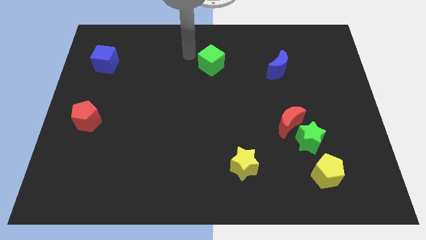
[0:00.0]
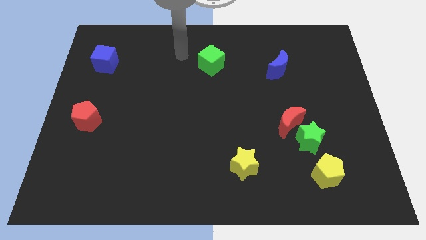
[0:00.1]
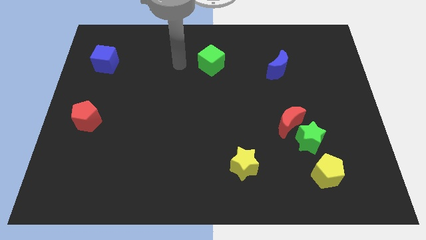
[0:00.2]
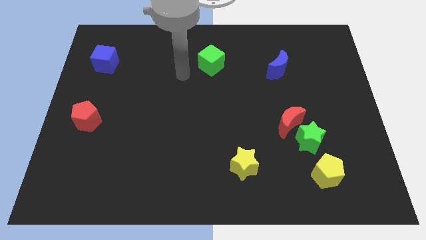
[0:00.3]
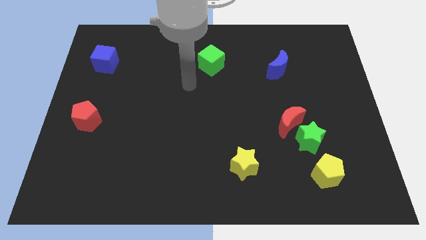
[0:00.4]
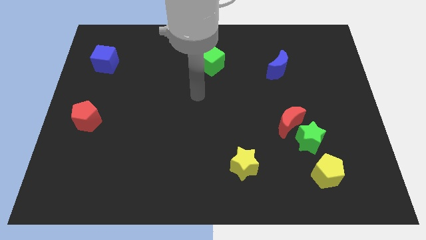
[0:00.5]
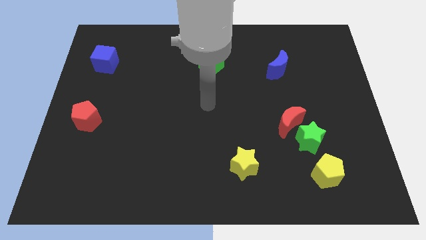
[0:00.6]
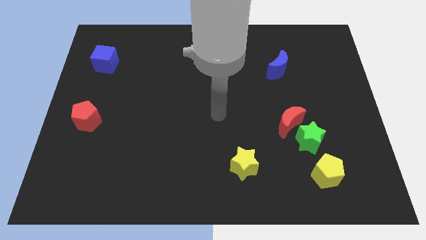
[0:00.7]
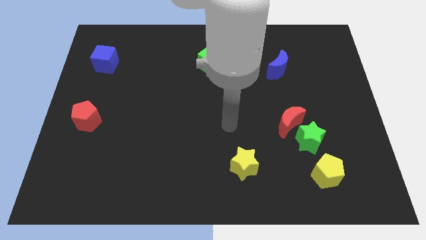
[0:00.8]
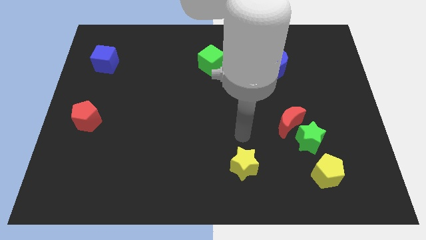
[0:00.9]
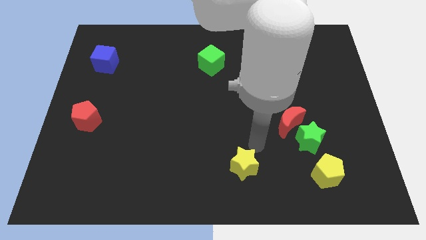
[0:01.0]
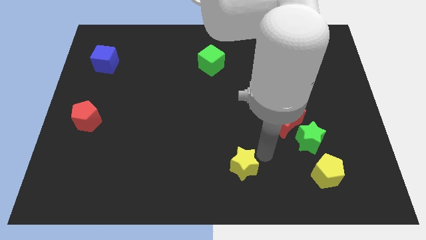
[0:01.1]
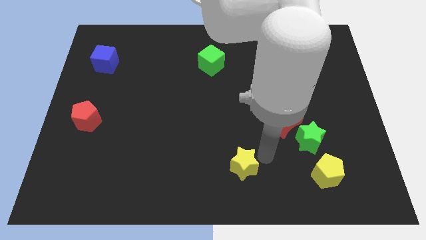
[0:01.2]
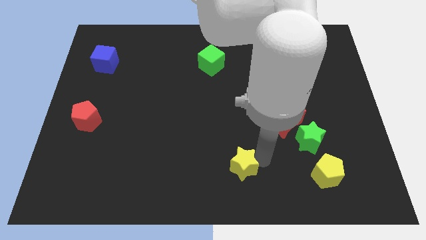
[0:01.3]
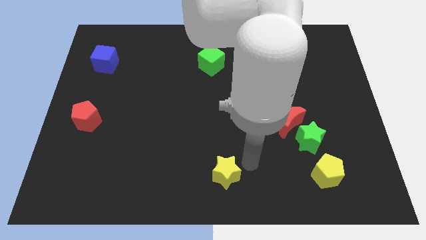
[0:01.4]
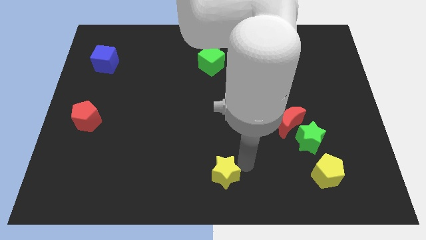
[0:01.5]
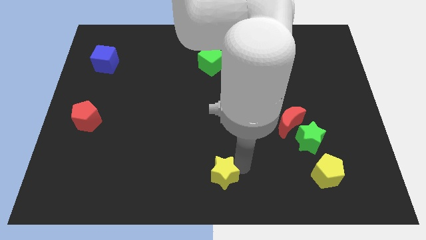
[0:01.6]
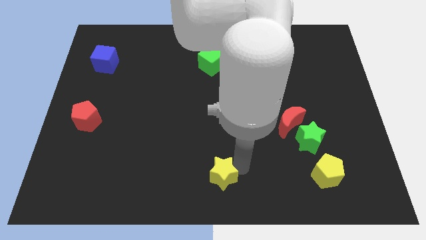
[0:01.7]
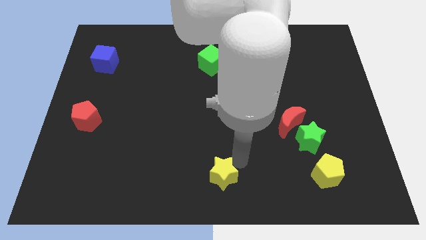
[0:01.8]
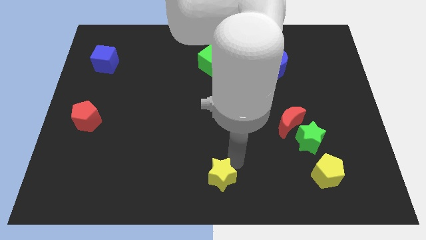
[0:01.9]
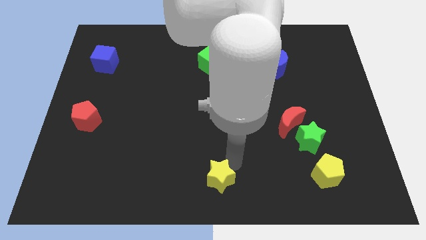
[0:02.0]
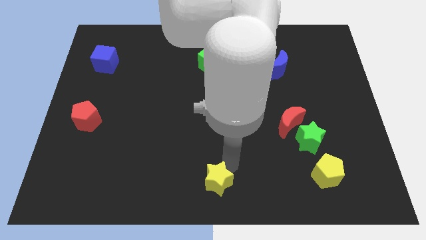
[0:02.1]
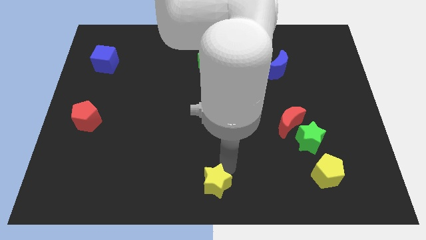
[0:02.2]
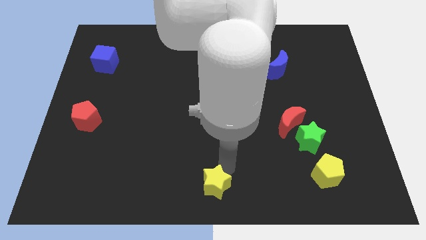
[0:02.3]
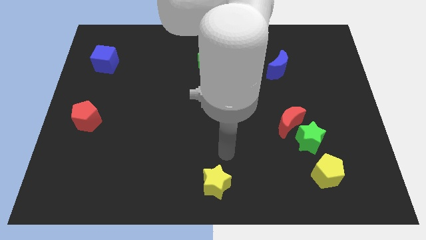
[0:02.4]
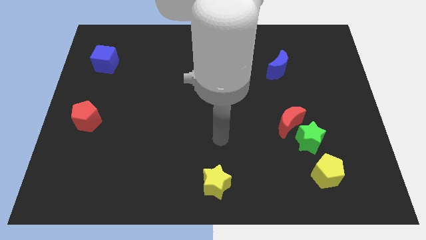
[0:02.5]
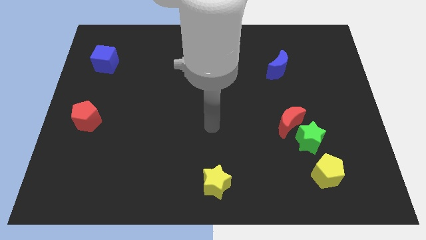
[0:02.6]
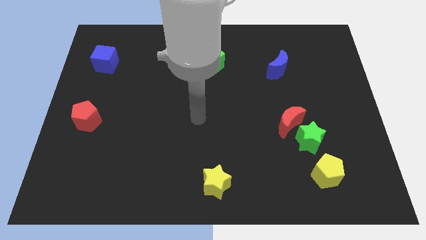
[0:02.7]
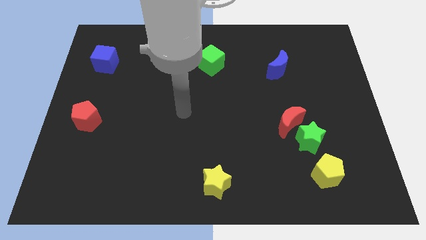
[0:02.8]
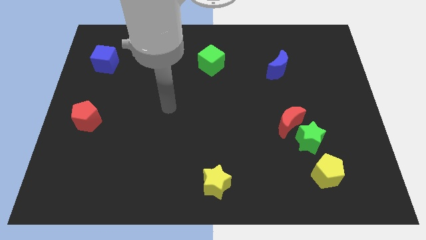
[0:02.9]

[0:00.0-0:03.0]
place the yellow star at the bottom center of the board

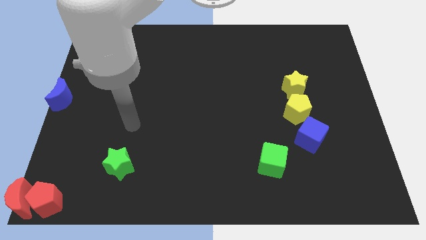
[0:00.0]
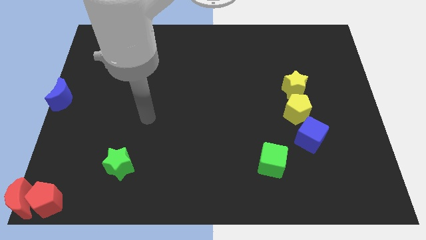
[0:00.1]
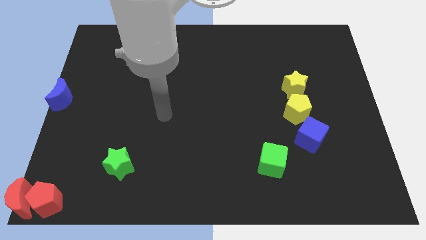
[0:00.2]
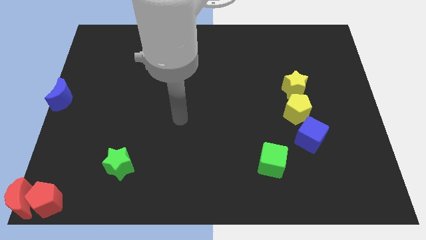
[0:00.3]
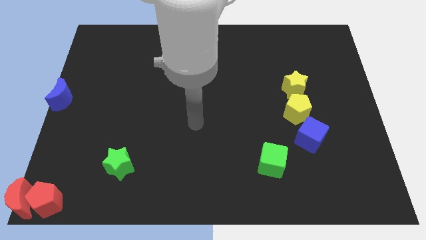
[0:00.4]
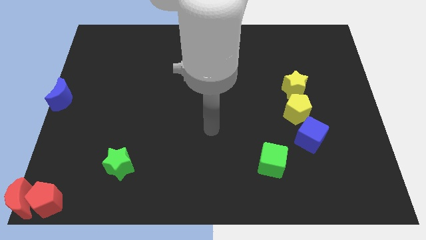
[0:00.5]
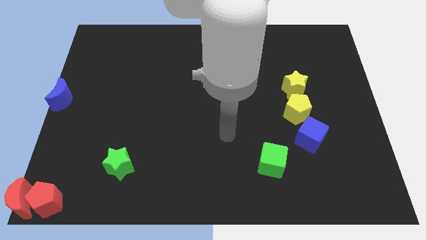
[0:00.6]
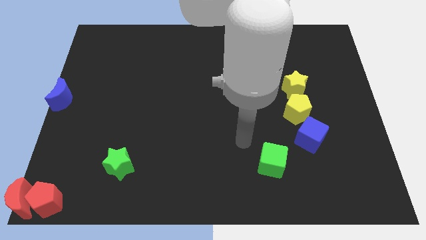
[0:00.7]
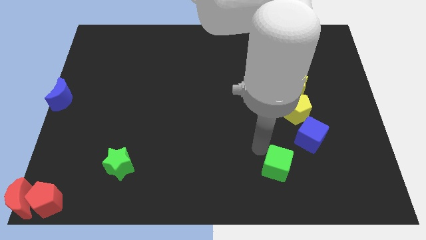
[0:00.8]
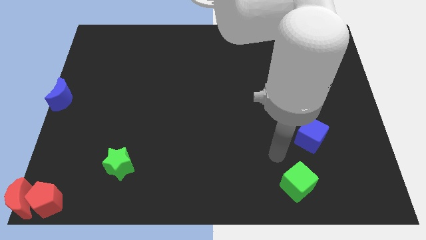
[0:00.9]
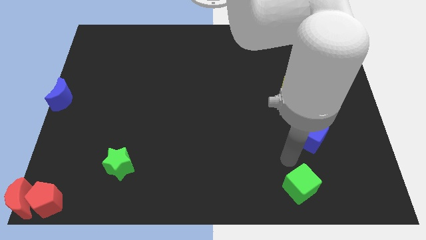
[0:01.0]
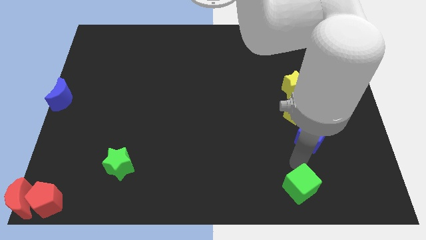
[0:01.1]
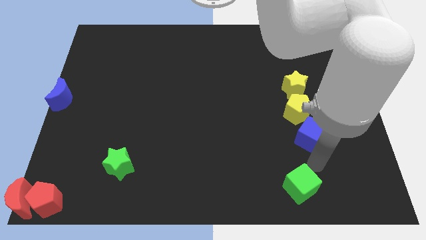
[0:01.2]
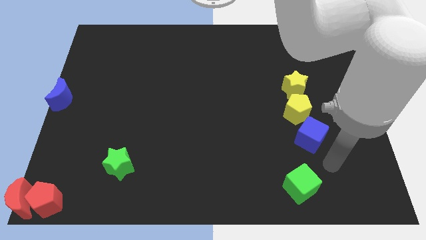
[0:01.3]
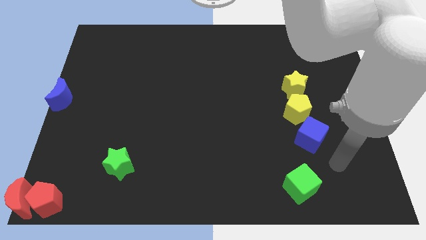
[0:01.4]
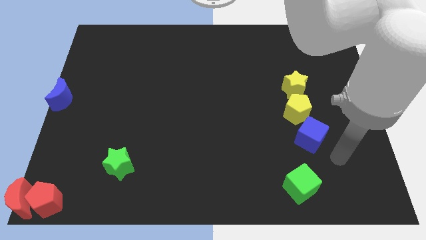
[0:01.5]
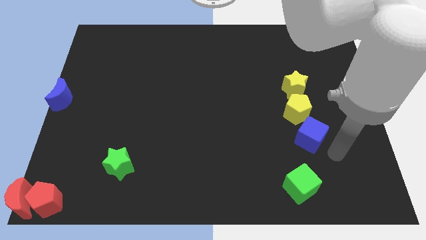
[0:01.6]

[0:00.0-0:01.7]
move the green cube slightly to the bottom

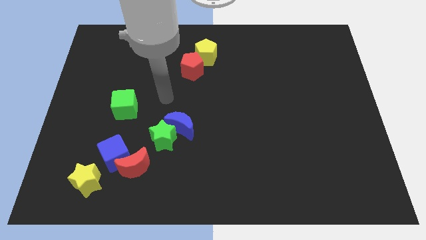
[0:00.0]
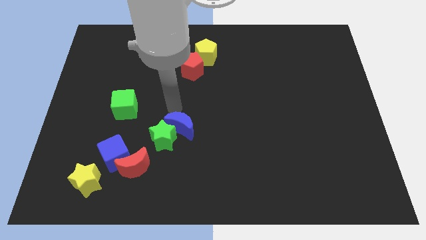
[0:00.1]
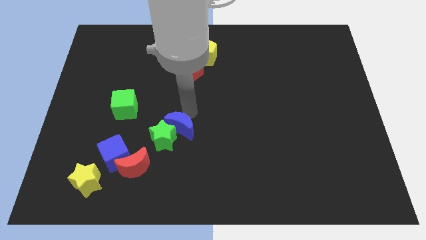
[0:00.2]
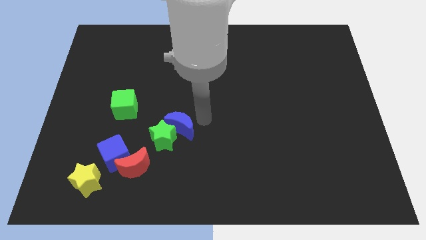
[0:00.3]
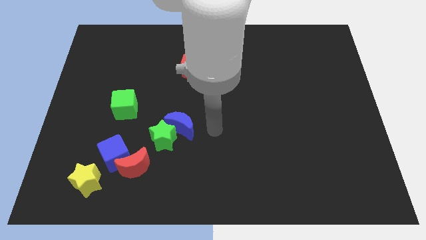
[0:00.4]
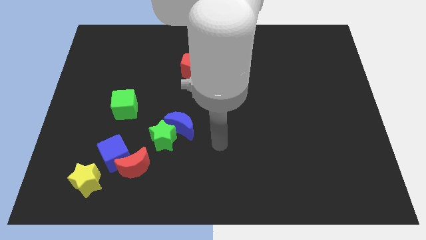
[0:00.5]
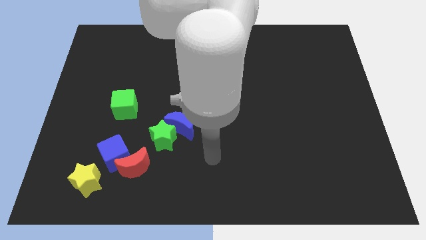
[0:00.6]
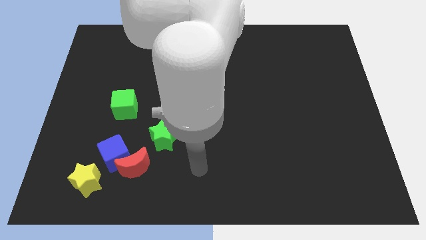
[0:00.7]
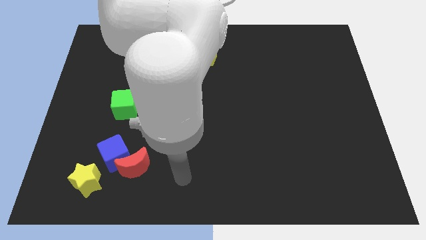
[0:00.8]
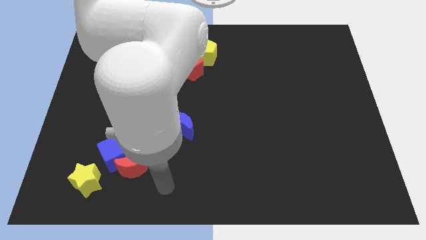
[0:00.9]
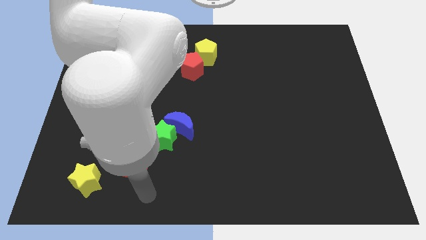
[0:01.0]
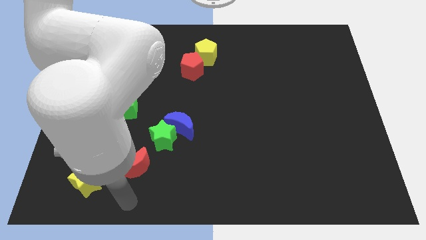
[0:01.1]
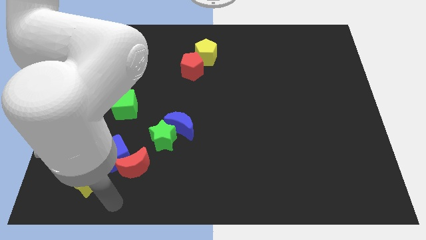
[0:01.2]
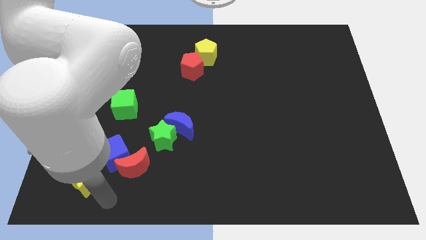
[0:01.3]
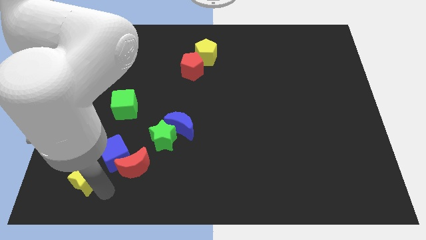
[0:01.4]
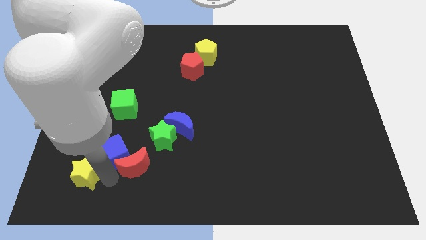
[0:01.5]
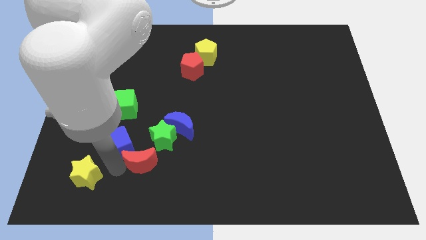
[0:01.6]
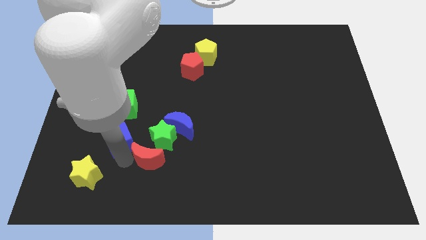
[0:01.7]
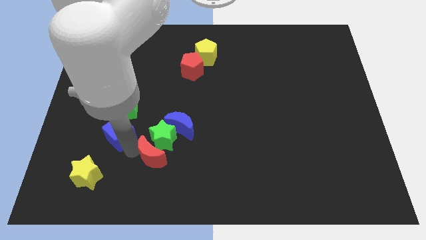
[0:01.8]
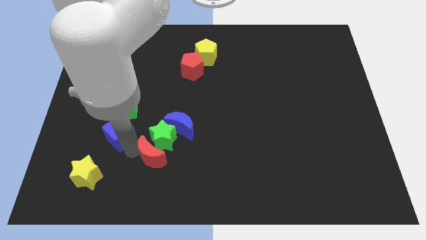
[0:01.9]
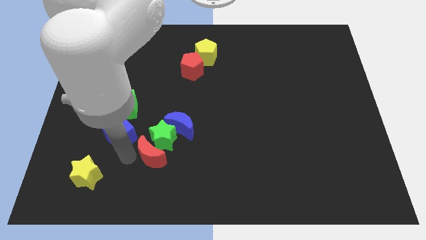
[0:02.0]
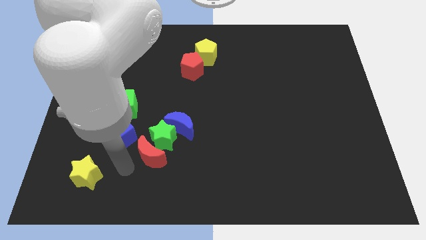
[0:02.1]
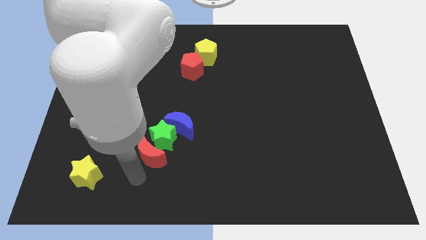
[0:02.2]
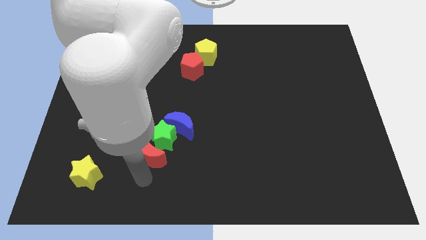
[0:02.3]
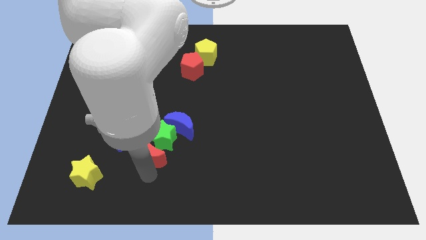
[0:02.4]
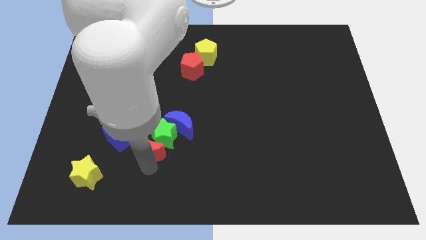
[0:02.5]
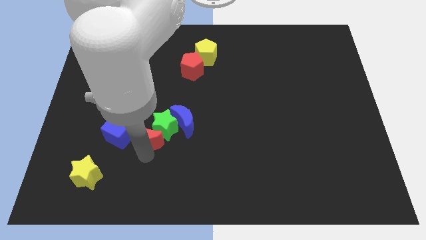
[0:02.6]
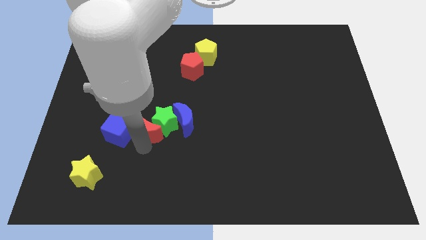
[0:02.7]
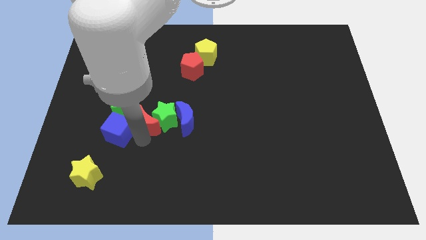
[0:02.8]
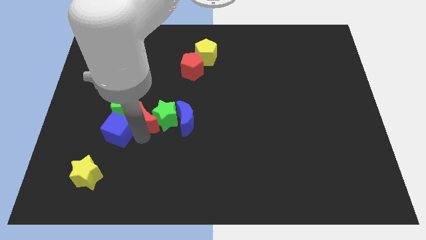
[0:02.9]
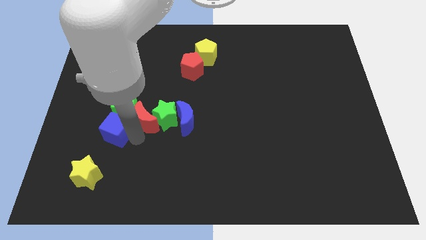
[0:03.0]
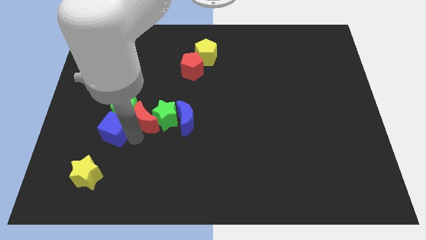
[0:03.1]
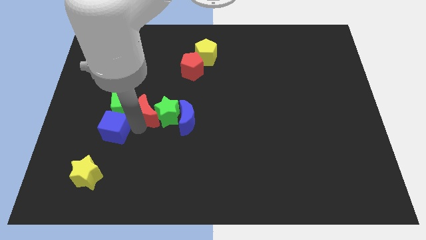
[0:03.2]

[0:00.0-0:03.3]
move the red crescent to the left of the green star

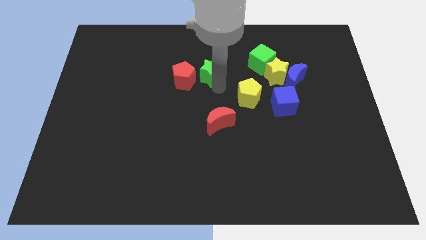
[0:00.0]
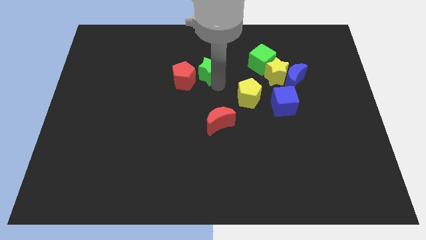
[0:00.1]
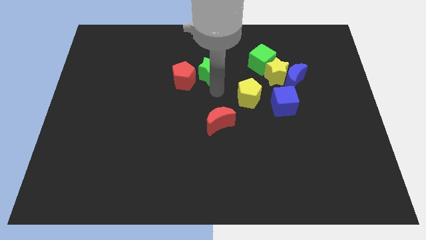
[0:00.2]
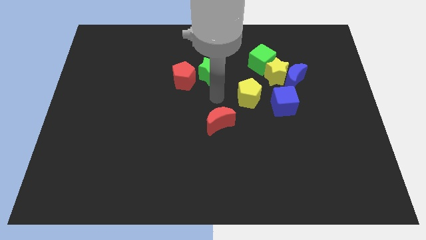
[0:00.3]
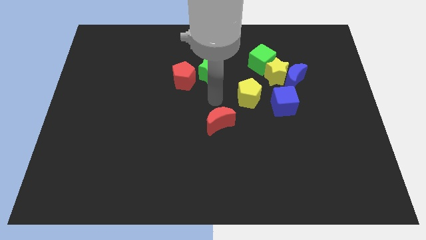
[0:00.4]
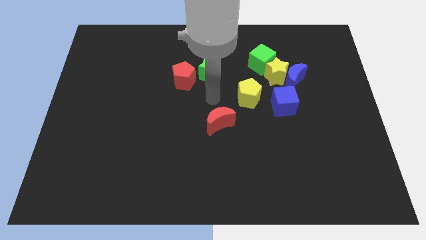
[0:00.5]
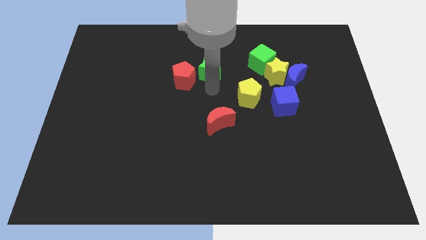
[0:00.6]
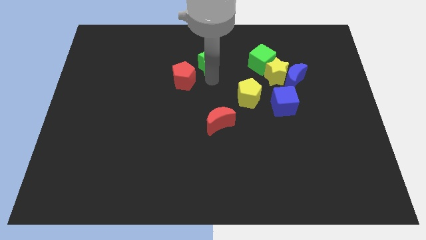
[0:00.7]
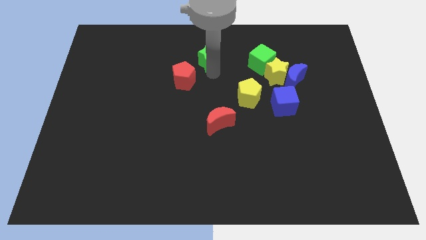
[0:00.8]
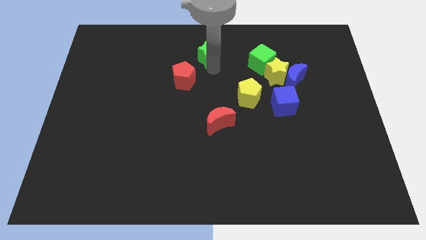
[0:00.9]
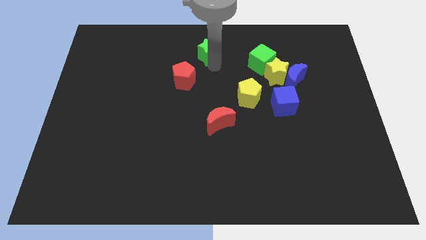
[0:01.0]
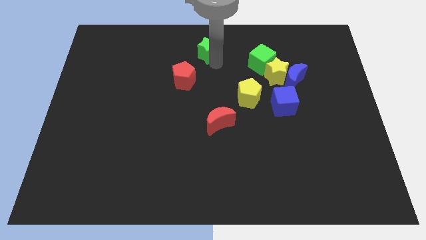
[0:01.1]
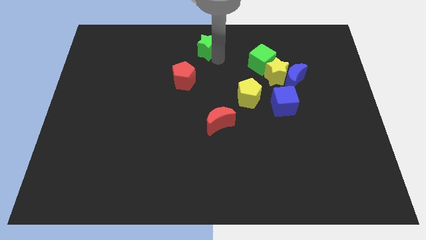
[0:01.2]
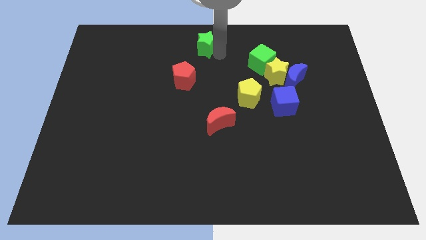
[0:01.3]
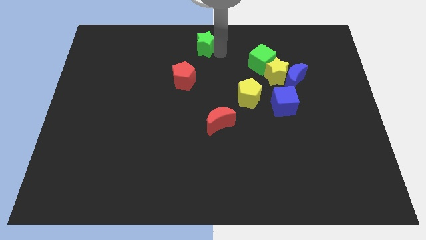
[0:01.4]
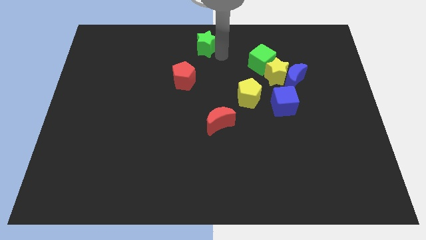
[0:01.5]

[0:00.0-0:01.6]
push the green star diagonally to the top right of the red pentagon
